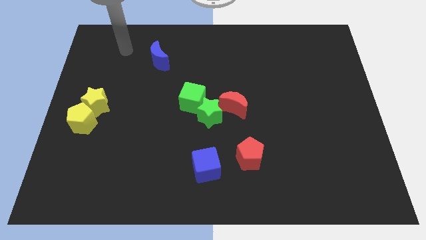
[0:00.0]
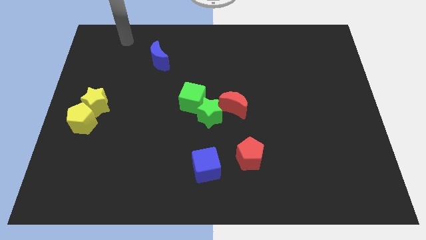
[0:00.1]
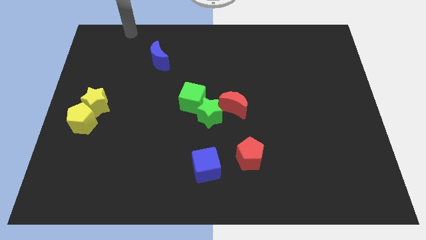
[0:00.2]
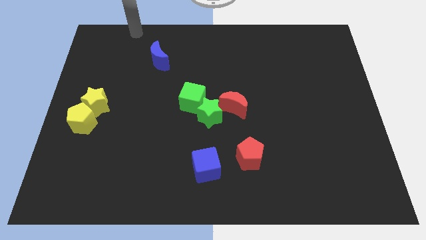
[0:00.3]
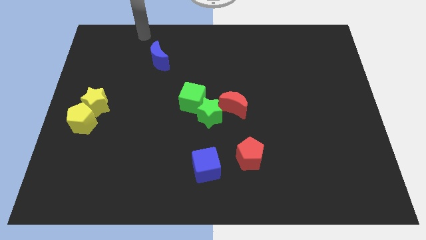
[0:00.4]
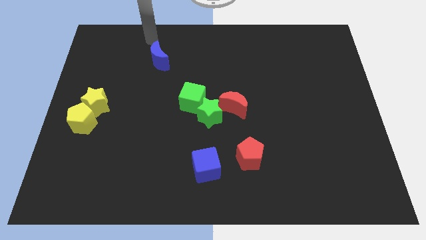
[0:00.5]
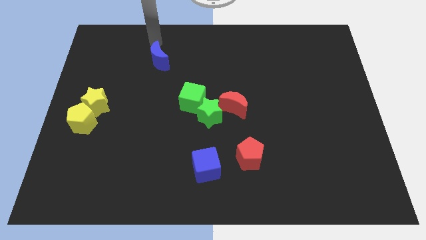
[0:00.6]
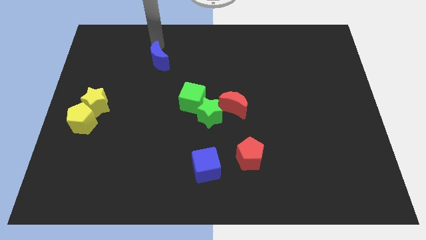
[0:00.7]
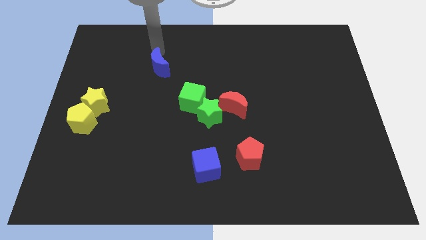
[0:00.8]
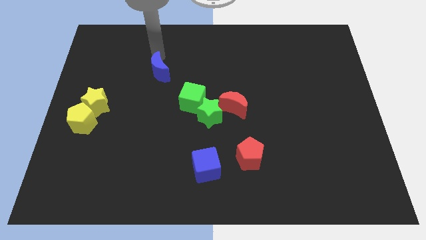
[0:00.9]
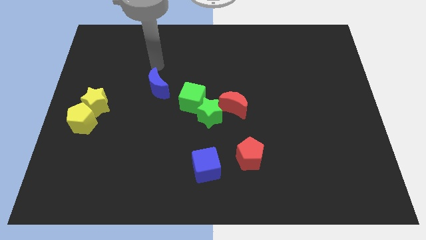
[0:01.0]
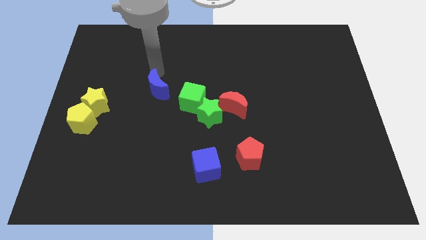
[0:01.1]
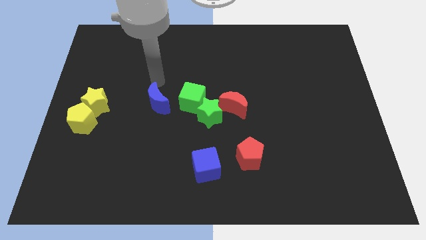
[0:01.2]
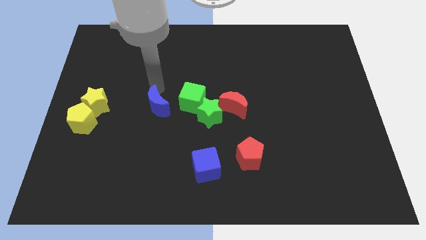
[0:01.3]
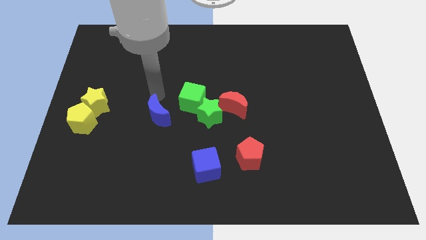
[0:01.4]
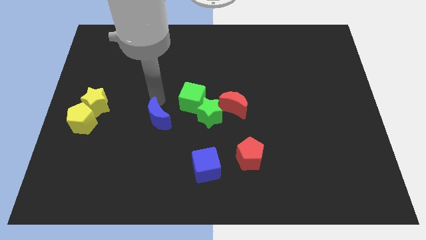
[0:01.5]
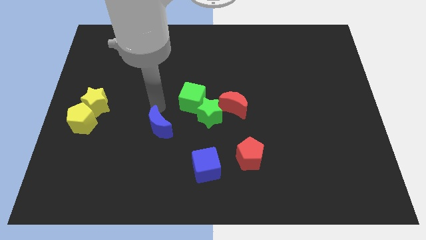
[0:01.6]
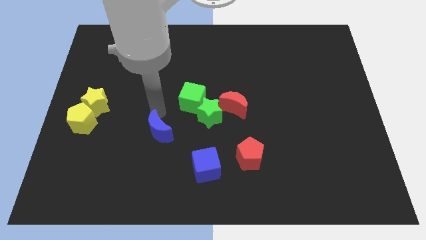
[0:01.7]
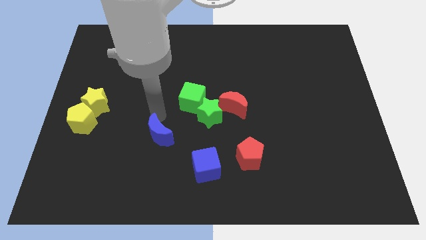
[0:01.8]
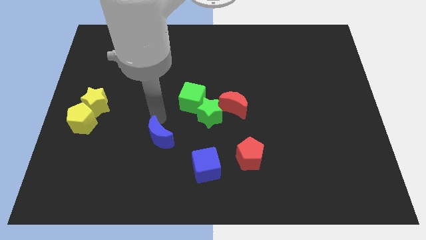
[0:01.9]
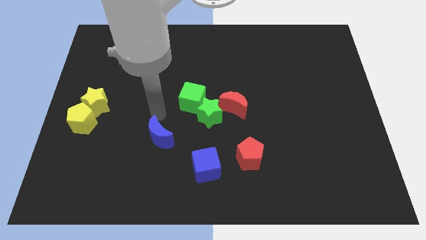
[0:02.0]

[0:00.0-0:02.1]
slide blue moon to top left of blue cube

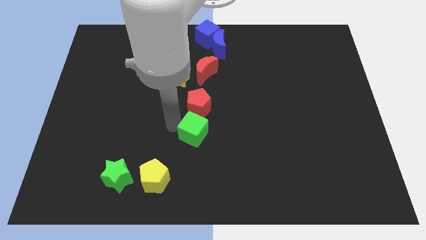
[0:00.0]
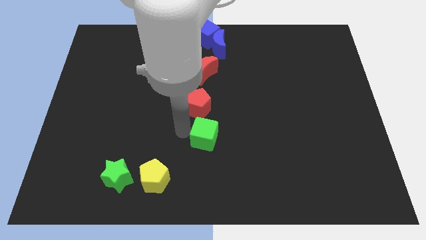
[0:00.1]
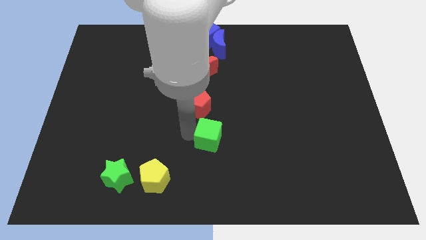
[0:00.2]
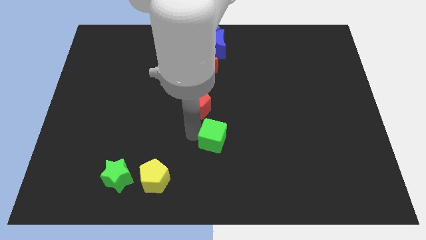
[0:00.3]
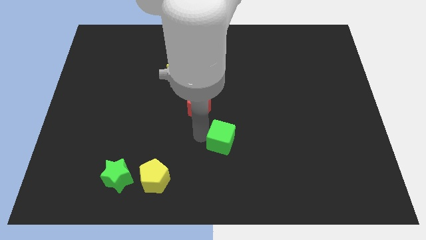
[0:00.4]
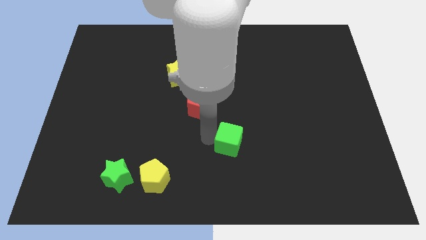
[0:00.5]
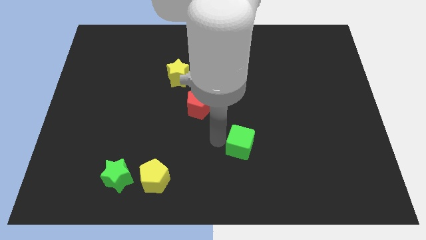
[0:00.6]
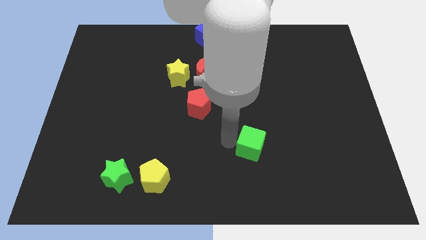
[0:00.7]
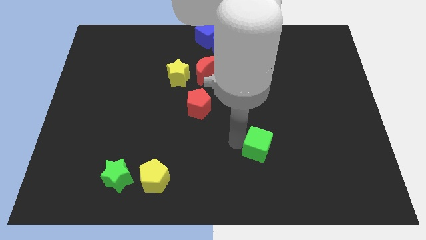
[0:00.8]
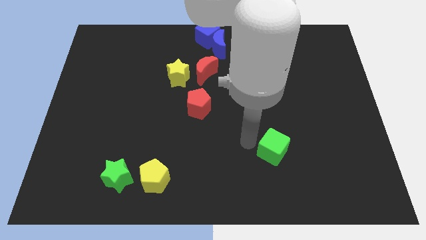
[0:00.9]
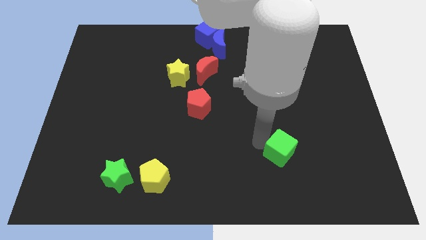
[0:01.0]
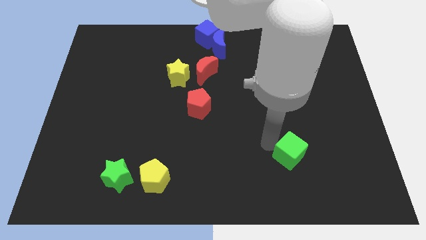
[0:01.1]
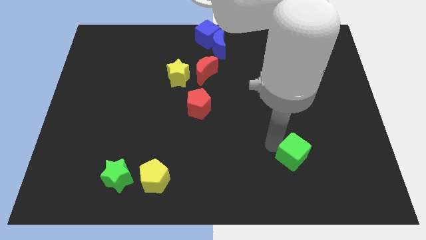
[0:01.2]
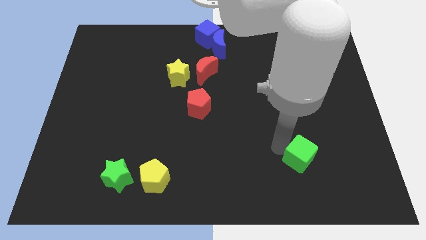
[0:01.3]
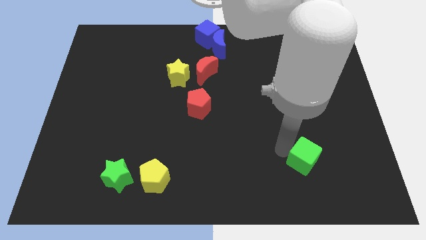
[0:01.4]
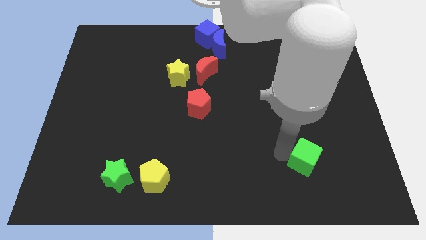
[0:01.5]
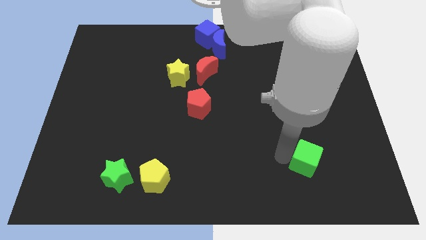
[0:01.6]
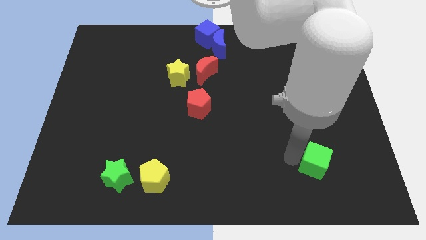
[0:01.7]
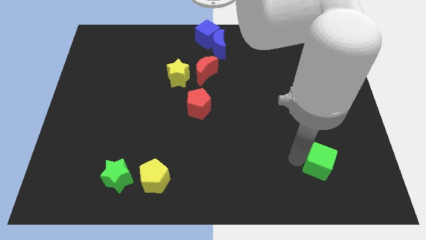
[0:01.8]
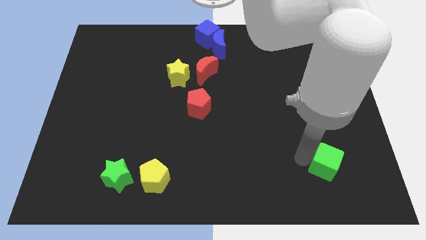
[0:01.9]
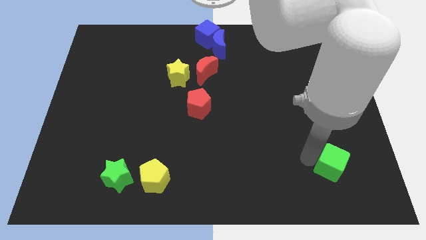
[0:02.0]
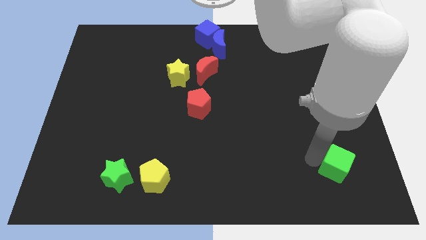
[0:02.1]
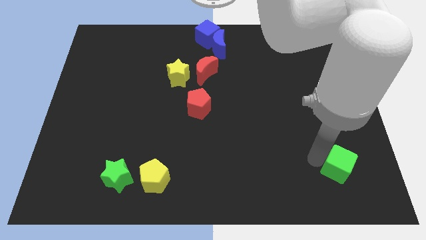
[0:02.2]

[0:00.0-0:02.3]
move green cube towards bottom right

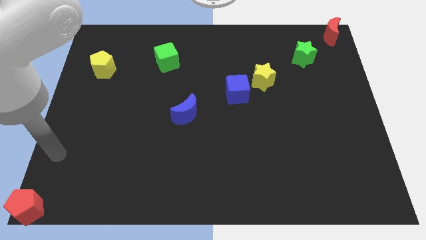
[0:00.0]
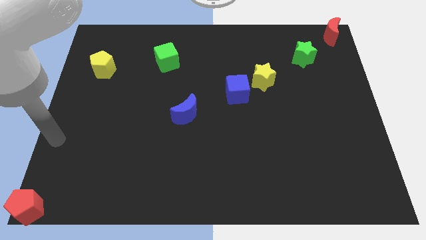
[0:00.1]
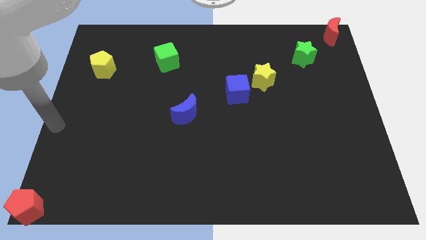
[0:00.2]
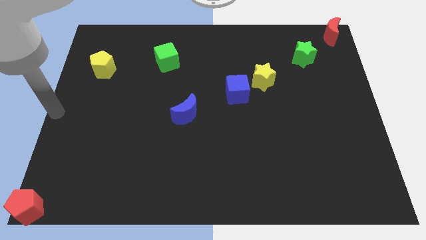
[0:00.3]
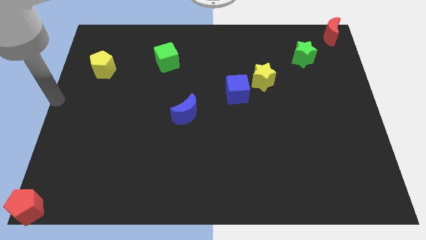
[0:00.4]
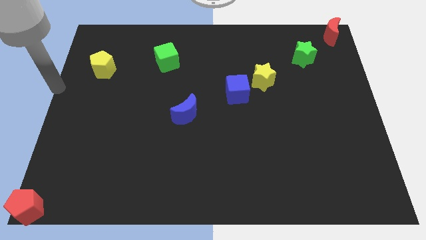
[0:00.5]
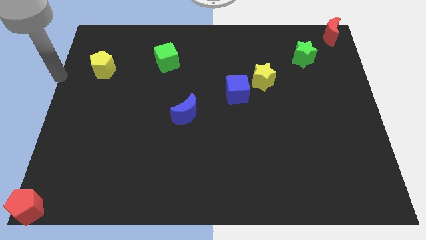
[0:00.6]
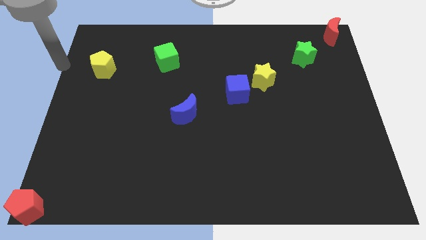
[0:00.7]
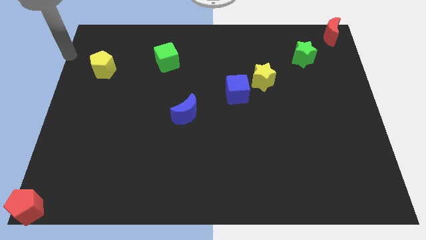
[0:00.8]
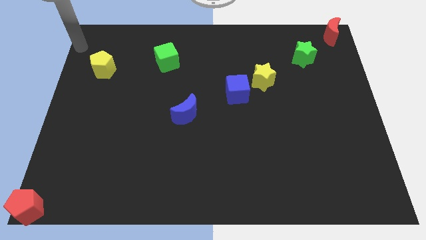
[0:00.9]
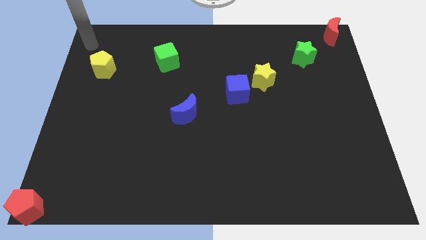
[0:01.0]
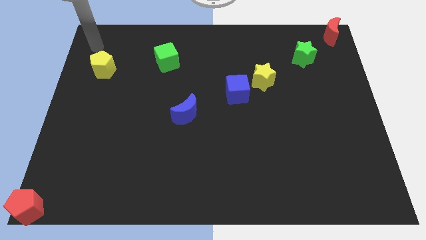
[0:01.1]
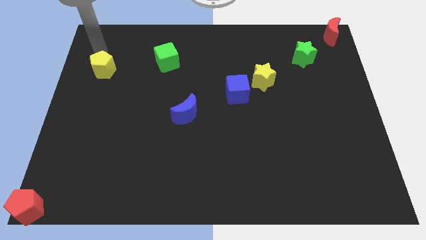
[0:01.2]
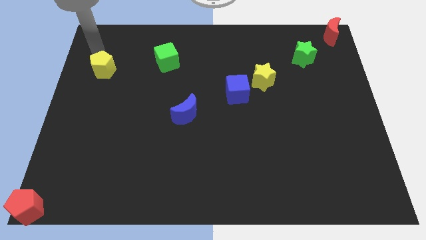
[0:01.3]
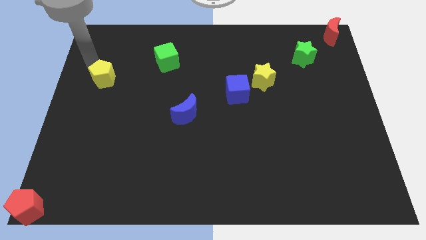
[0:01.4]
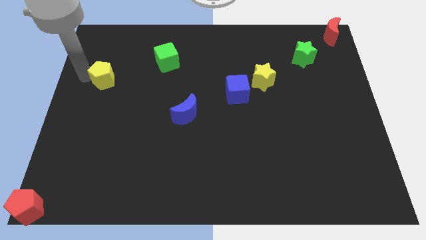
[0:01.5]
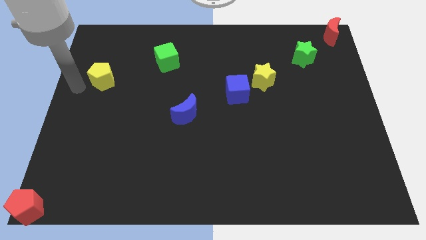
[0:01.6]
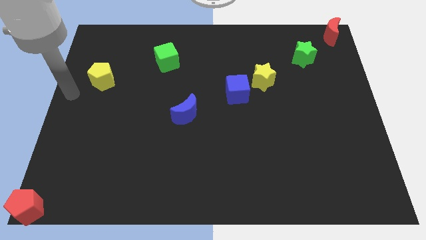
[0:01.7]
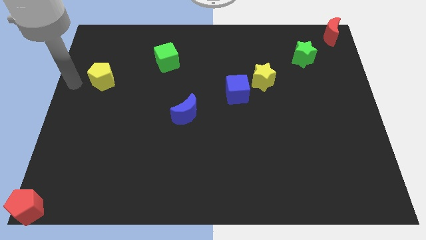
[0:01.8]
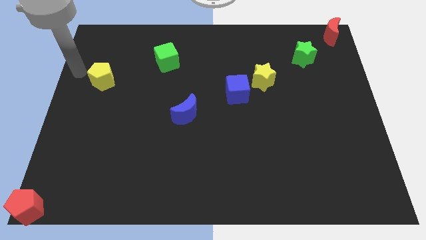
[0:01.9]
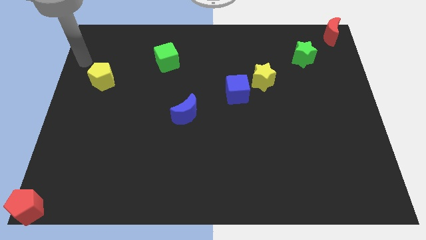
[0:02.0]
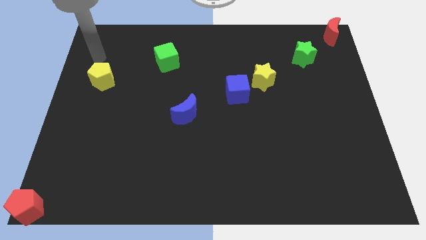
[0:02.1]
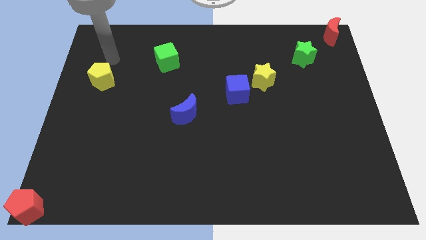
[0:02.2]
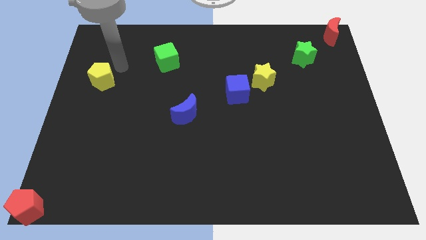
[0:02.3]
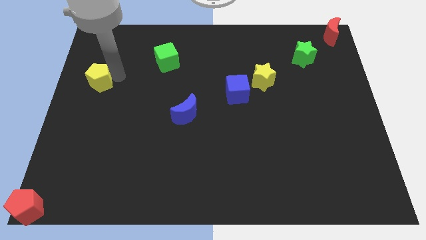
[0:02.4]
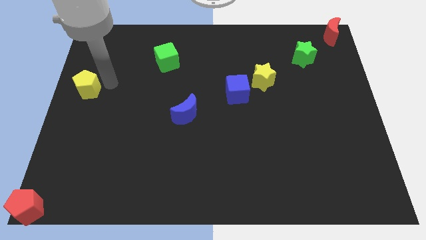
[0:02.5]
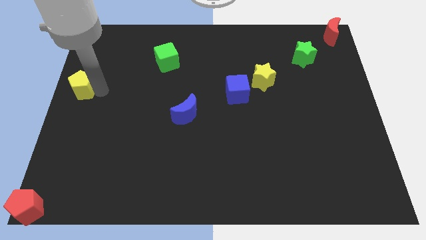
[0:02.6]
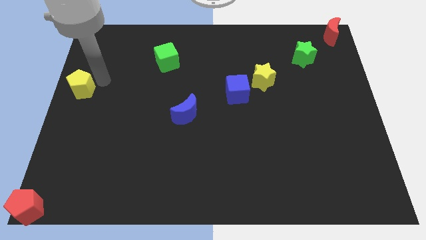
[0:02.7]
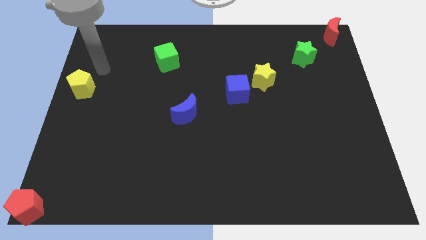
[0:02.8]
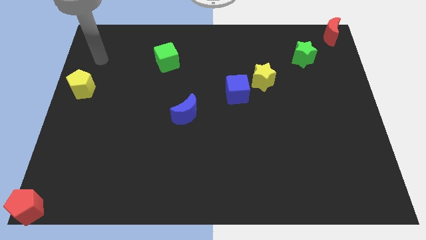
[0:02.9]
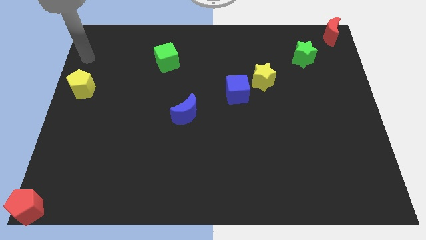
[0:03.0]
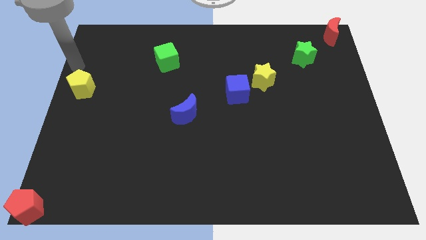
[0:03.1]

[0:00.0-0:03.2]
push the yellow pentagon towards the bottom left of the board

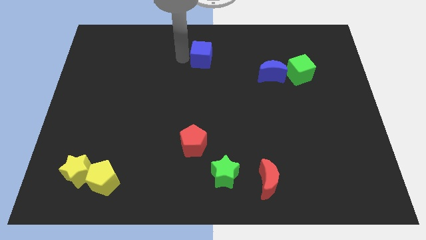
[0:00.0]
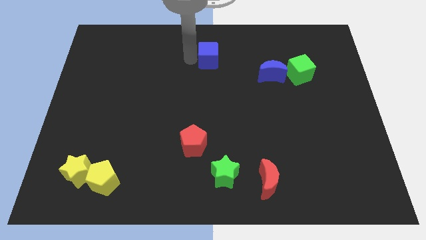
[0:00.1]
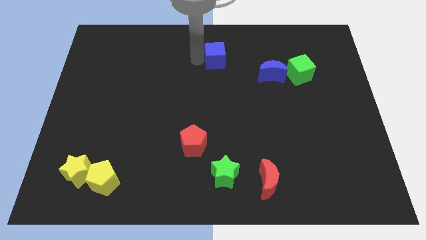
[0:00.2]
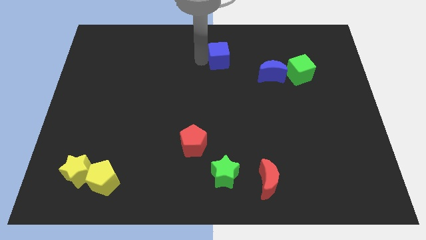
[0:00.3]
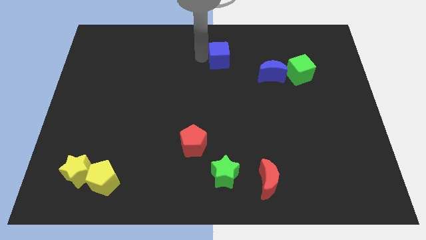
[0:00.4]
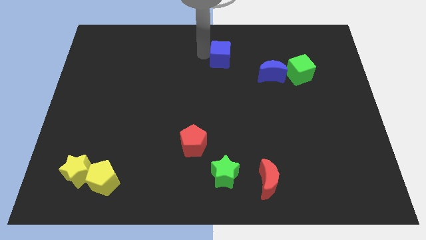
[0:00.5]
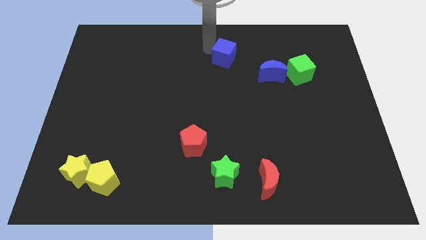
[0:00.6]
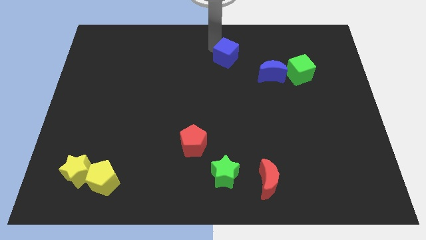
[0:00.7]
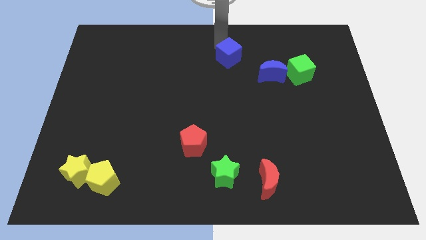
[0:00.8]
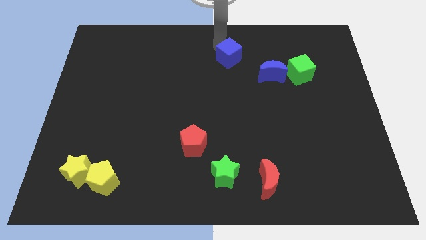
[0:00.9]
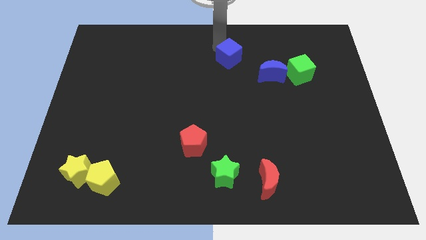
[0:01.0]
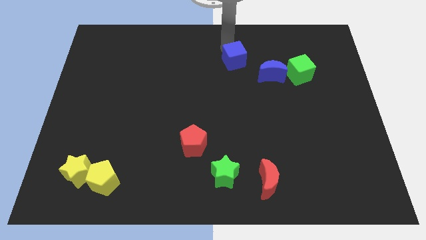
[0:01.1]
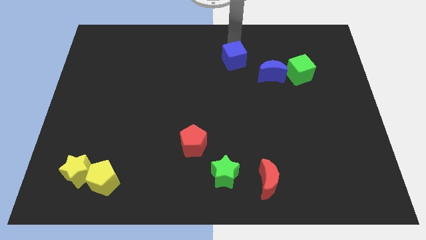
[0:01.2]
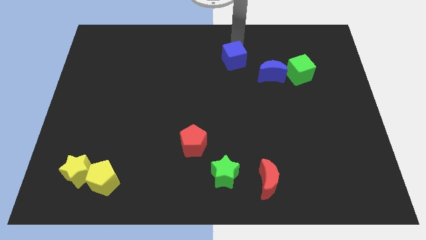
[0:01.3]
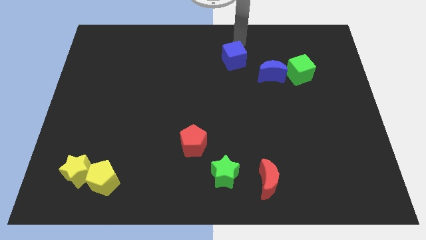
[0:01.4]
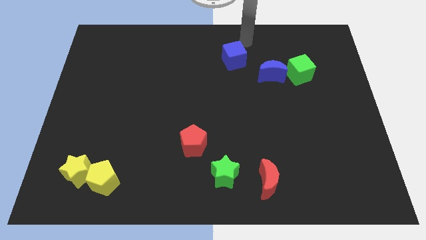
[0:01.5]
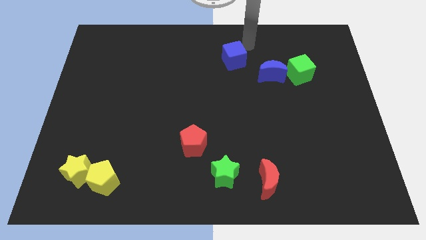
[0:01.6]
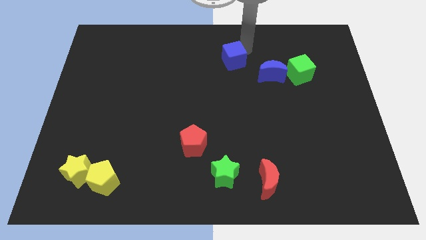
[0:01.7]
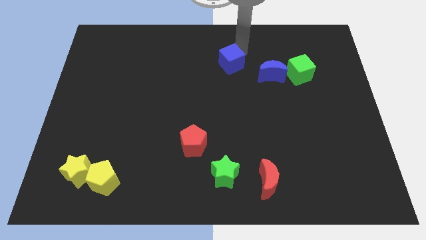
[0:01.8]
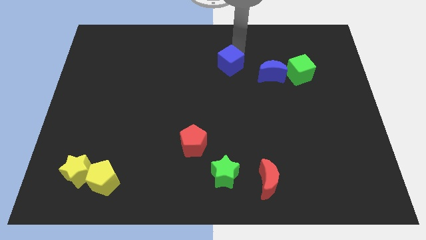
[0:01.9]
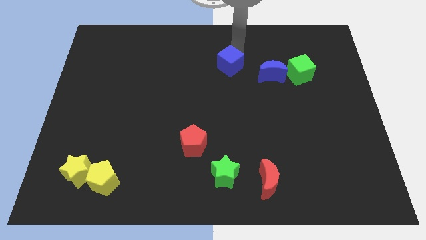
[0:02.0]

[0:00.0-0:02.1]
place the blue cube to the left of blue crescent
